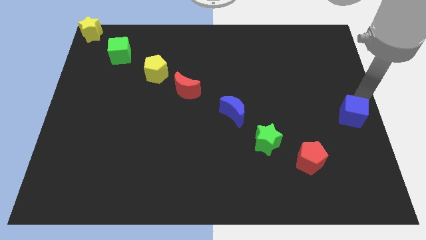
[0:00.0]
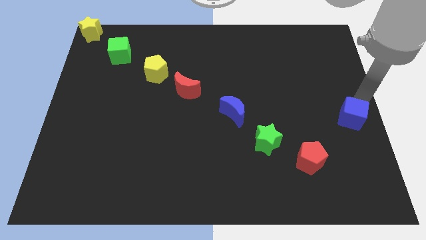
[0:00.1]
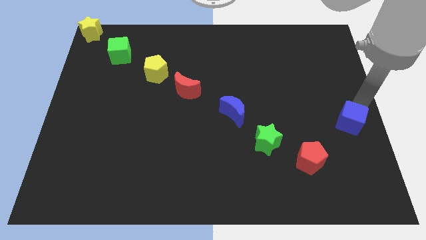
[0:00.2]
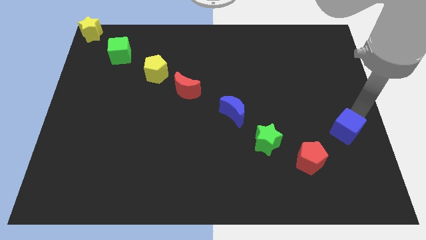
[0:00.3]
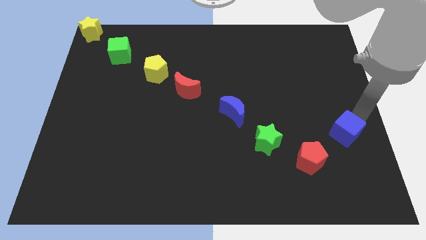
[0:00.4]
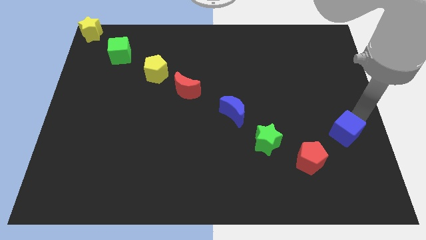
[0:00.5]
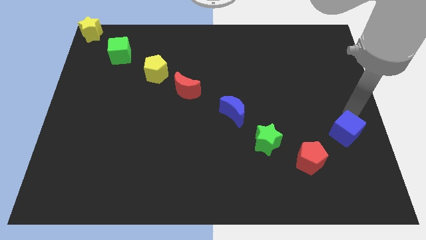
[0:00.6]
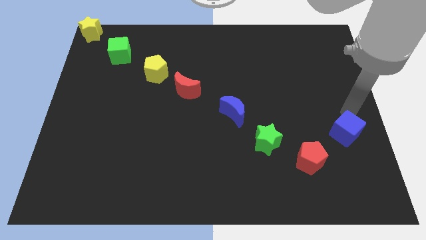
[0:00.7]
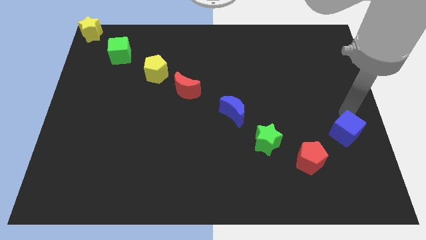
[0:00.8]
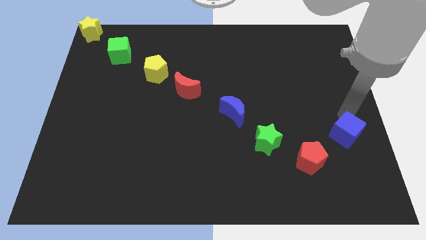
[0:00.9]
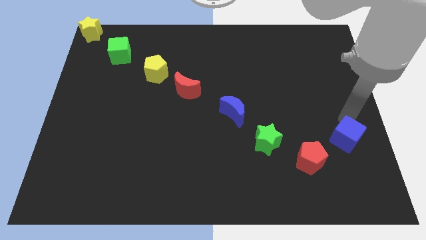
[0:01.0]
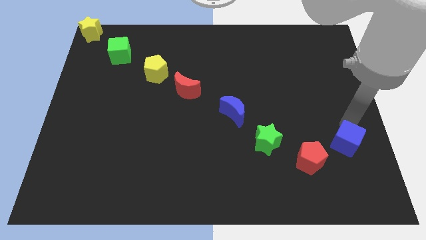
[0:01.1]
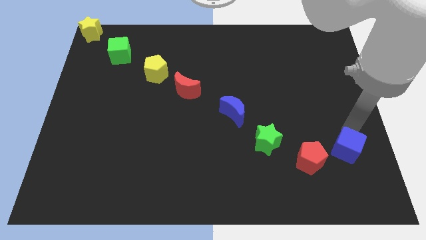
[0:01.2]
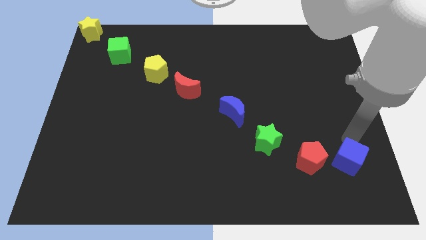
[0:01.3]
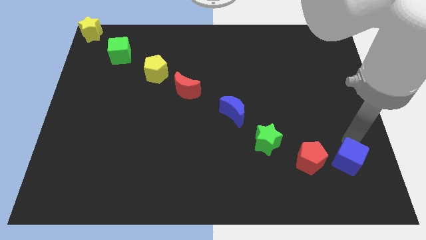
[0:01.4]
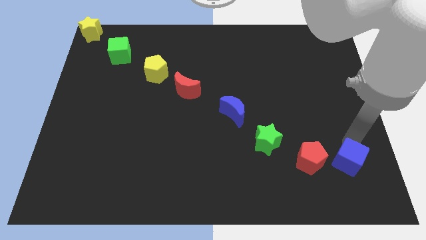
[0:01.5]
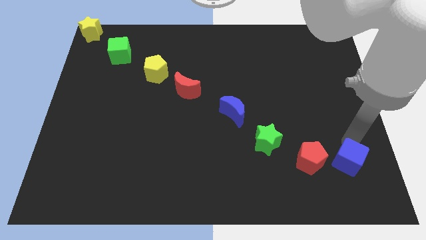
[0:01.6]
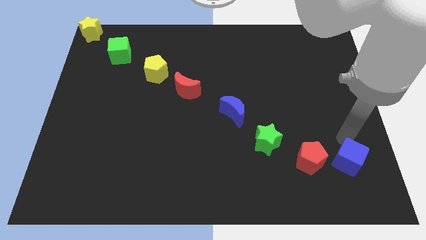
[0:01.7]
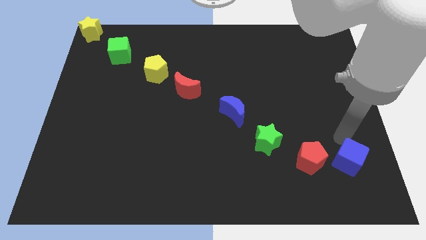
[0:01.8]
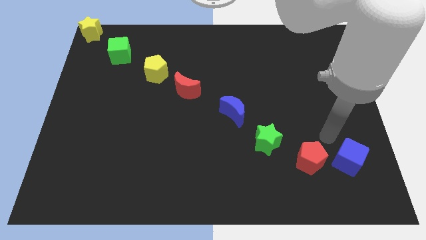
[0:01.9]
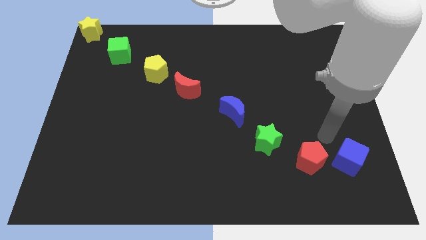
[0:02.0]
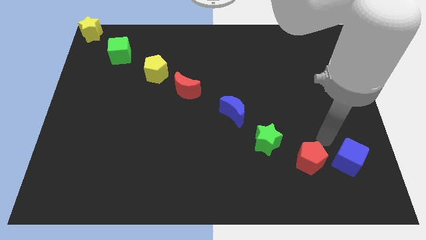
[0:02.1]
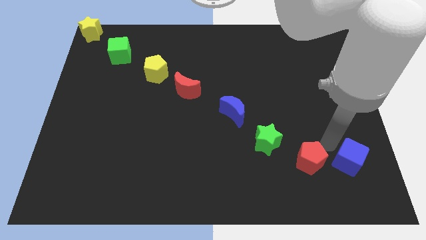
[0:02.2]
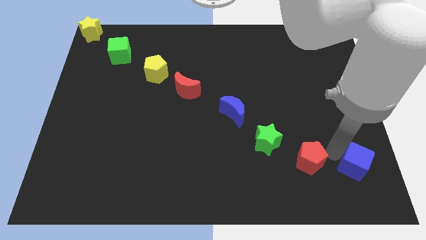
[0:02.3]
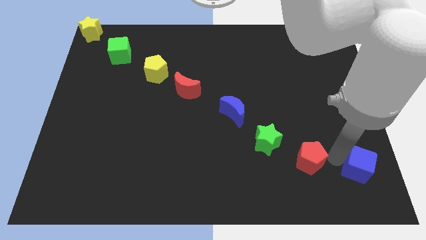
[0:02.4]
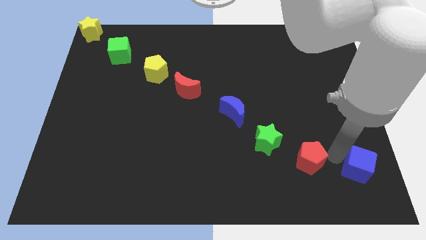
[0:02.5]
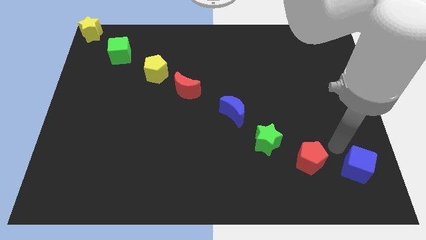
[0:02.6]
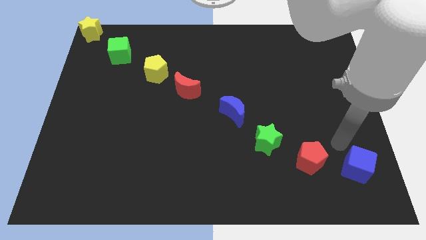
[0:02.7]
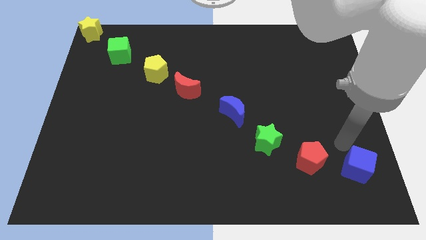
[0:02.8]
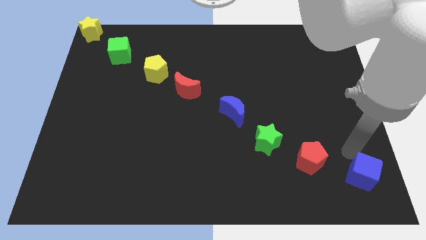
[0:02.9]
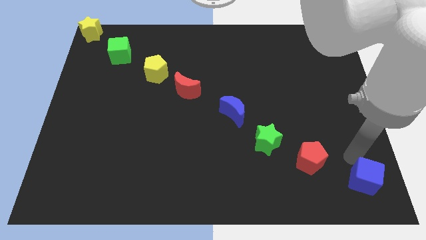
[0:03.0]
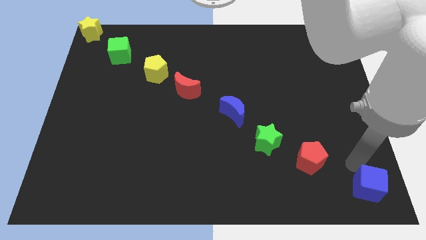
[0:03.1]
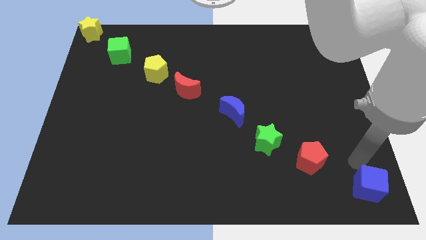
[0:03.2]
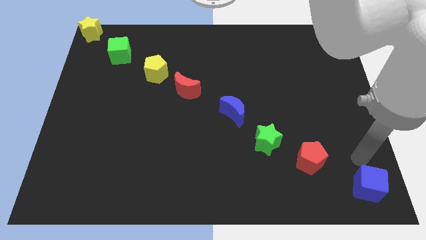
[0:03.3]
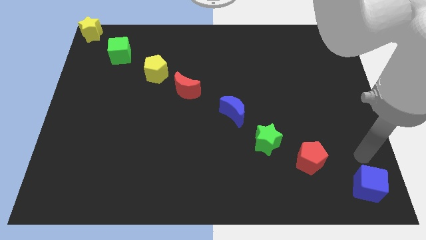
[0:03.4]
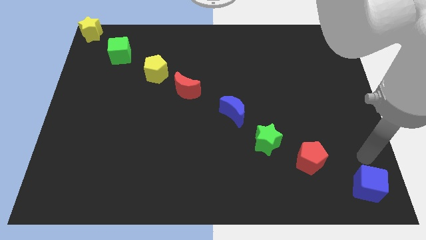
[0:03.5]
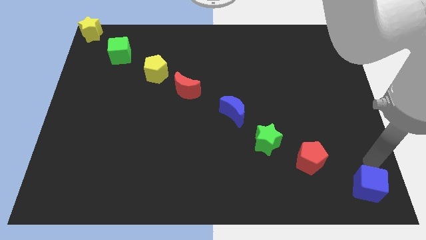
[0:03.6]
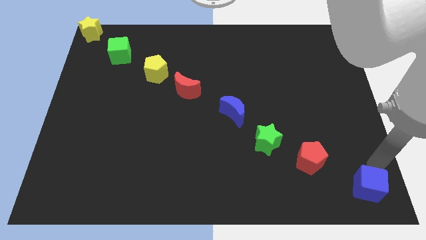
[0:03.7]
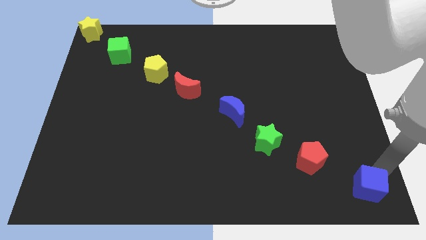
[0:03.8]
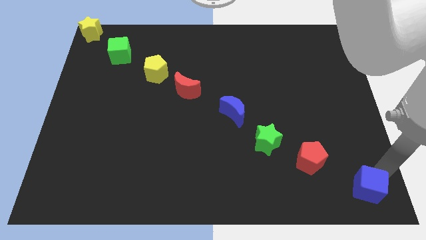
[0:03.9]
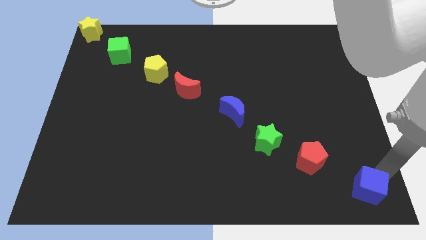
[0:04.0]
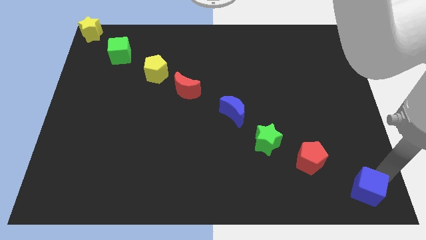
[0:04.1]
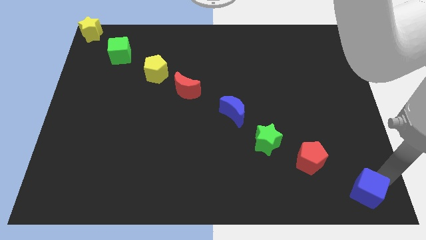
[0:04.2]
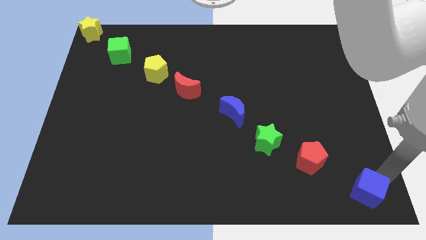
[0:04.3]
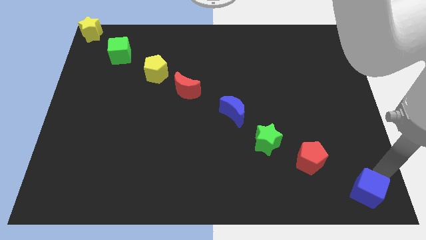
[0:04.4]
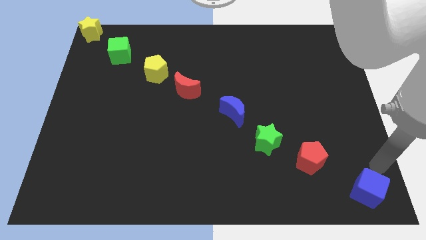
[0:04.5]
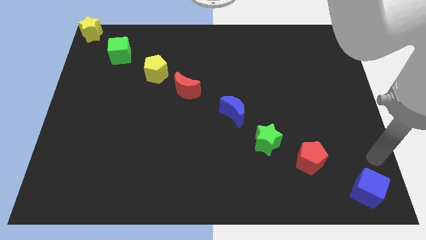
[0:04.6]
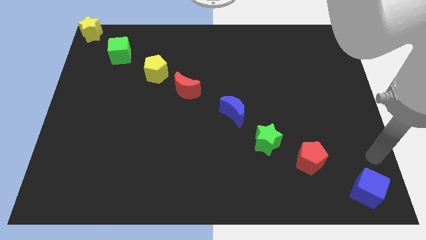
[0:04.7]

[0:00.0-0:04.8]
slide the blue cube to the bottom right corner of the board

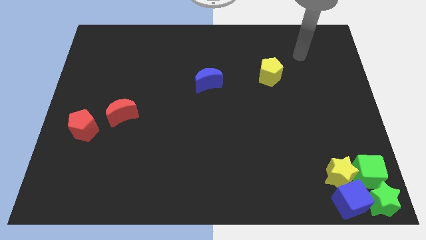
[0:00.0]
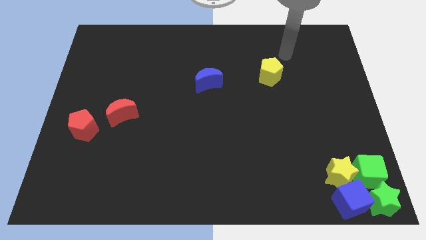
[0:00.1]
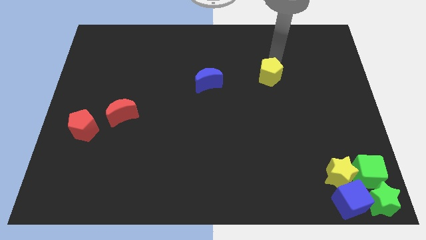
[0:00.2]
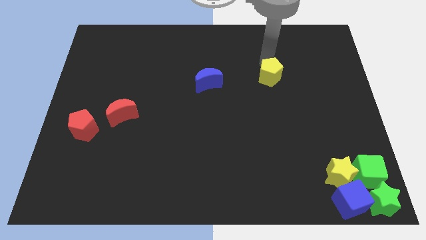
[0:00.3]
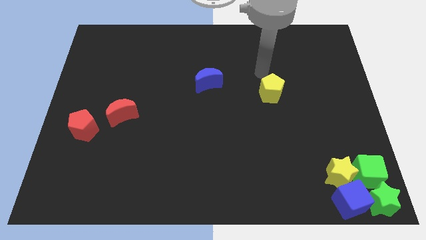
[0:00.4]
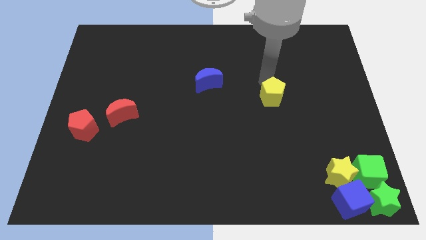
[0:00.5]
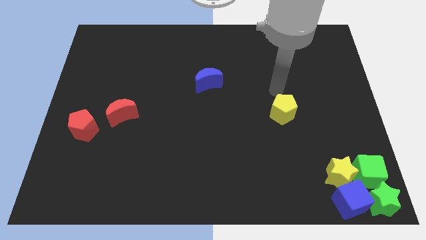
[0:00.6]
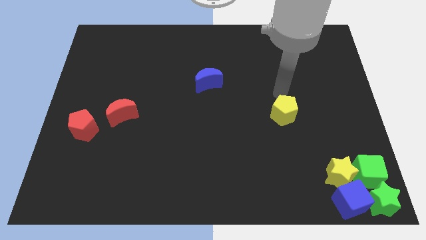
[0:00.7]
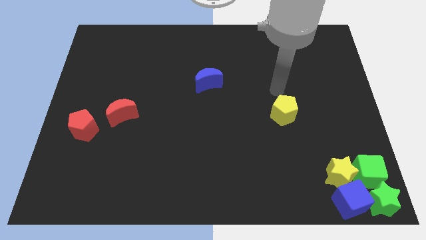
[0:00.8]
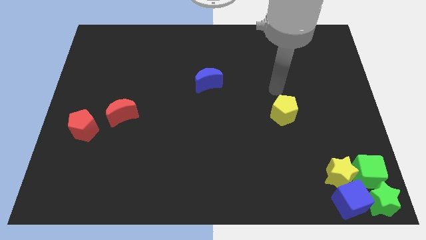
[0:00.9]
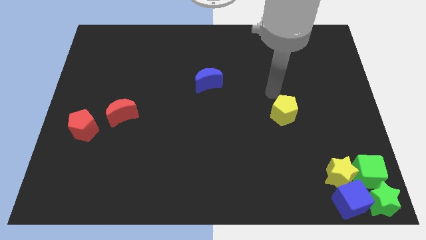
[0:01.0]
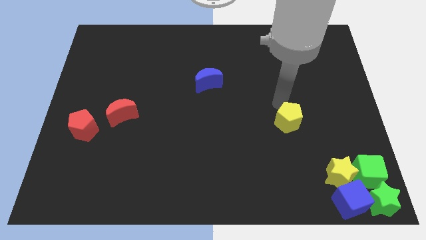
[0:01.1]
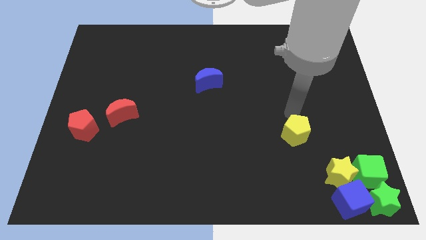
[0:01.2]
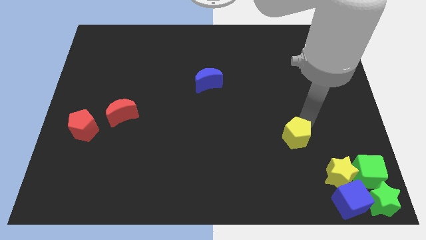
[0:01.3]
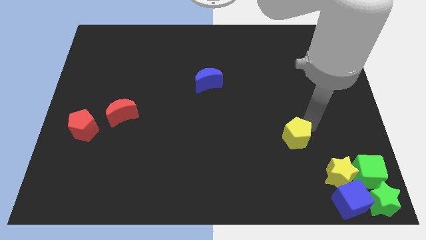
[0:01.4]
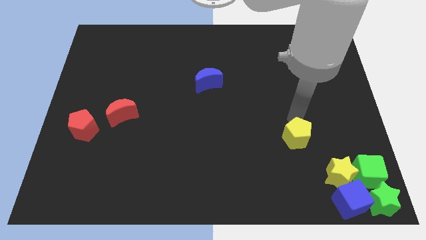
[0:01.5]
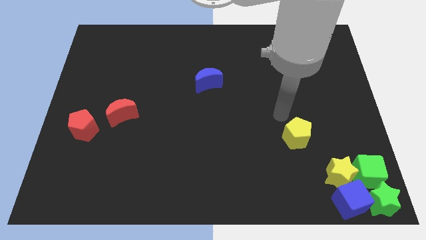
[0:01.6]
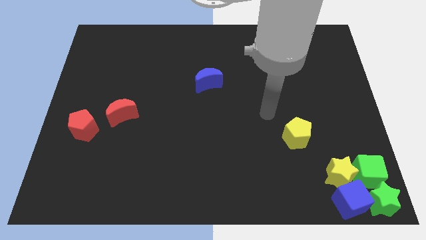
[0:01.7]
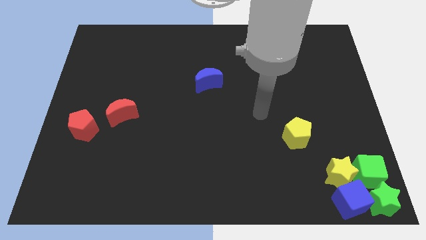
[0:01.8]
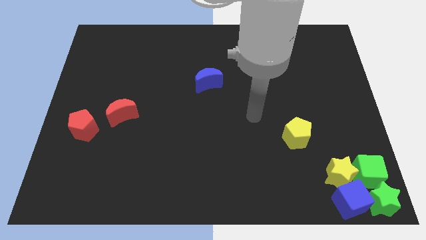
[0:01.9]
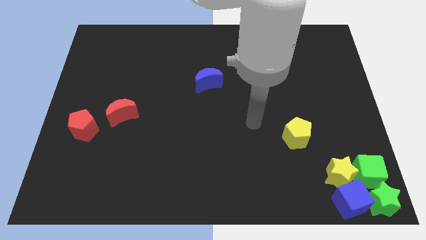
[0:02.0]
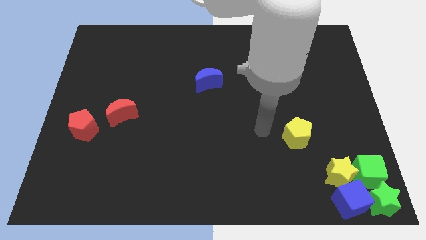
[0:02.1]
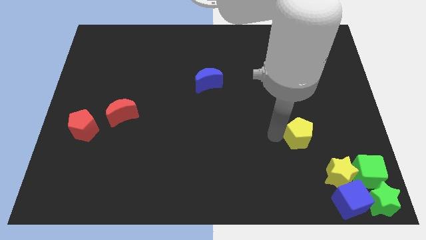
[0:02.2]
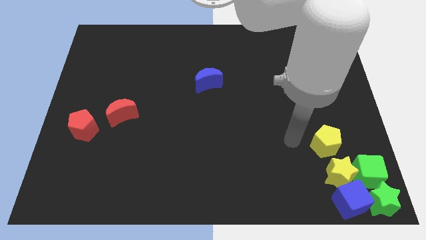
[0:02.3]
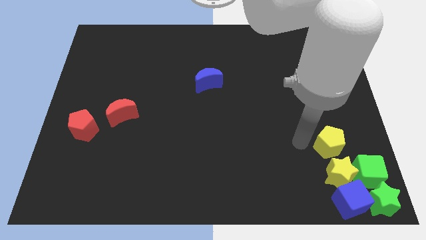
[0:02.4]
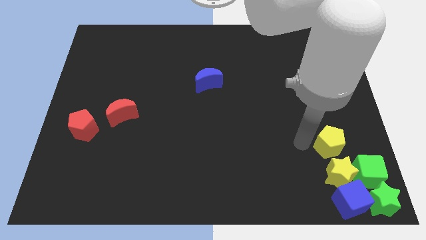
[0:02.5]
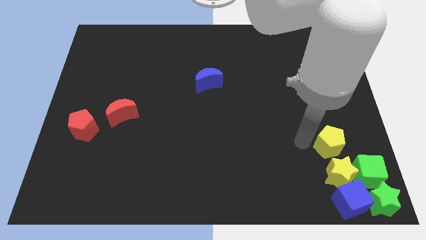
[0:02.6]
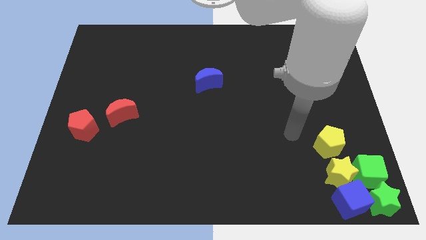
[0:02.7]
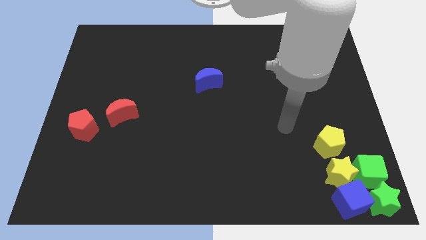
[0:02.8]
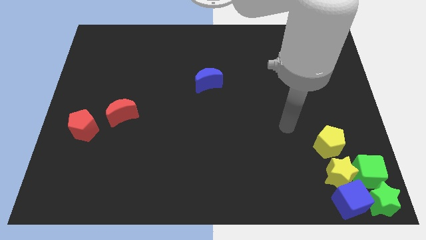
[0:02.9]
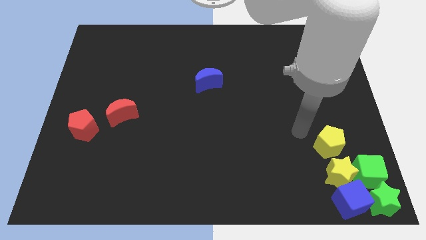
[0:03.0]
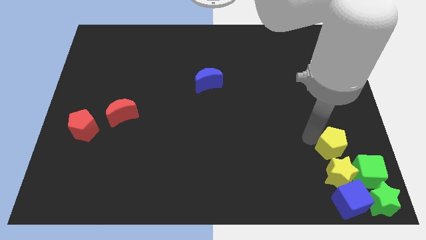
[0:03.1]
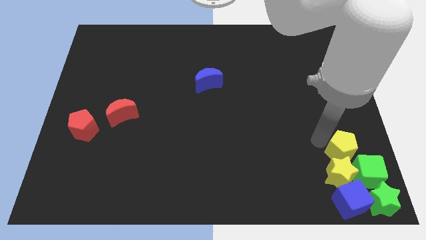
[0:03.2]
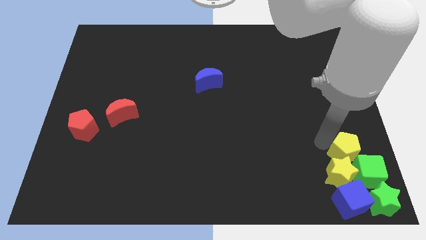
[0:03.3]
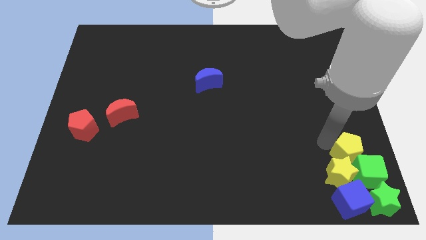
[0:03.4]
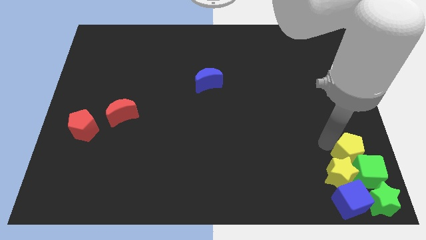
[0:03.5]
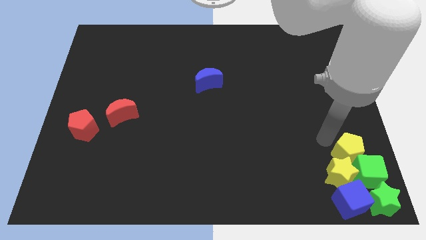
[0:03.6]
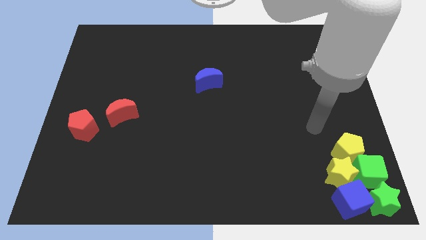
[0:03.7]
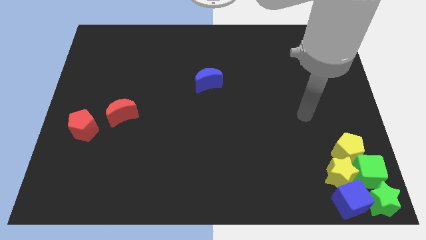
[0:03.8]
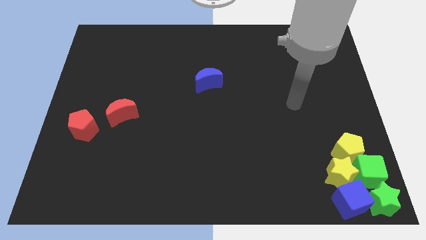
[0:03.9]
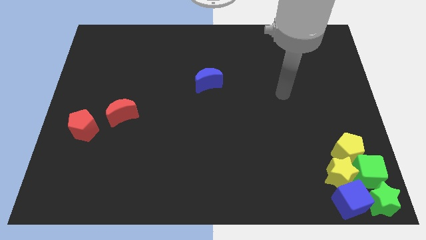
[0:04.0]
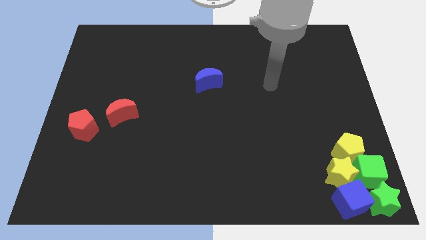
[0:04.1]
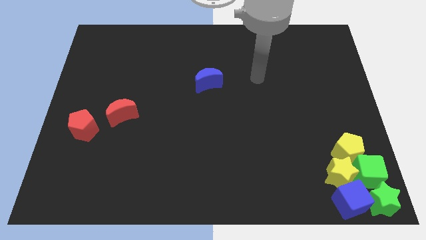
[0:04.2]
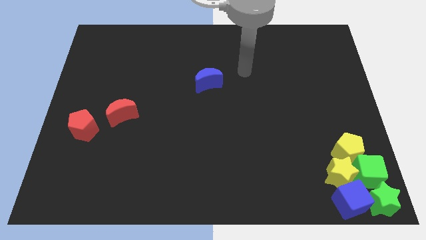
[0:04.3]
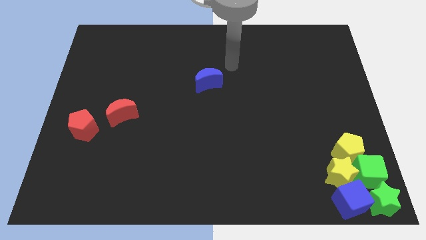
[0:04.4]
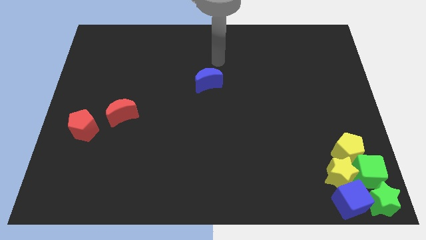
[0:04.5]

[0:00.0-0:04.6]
push the yellow pentagon towards the group of the blocks
